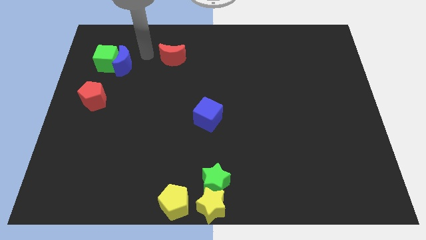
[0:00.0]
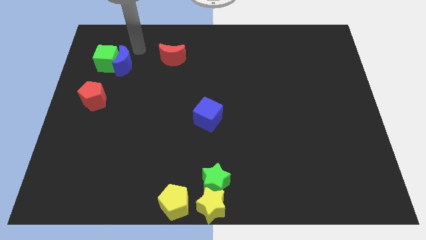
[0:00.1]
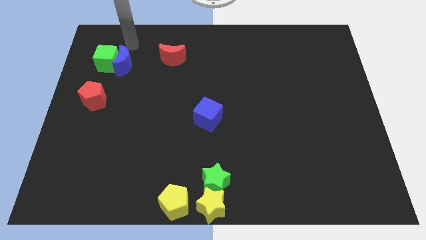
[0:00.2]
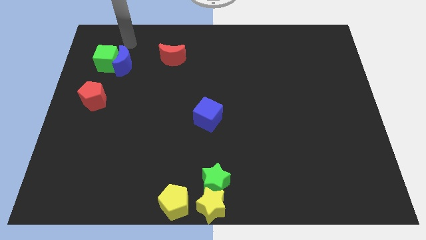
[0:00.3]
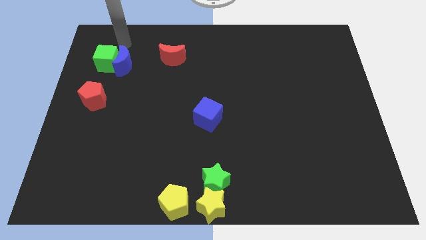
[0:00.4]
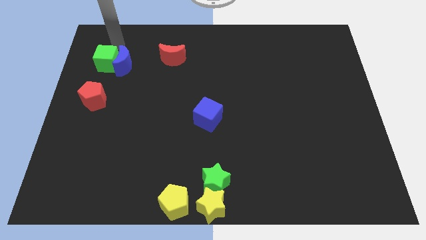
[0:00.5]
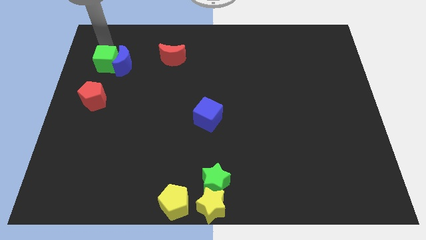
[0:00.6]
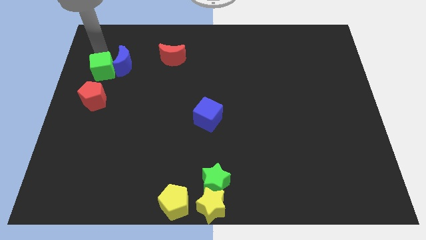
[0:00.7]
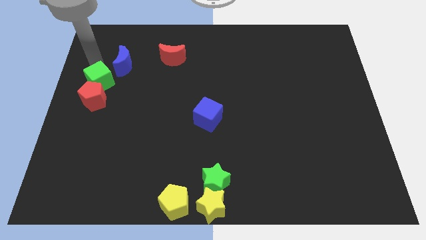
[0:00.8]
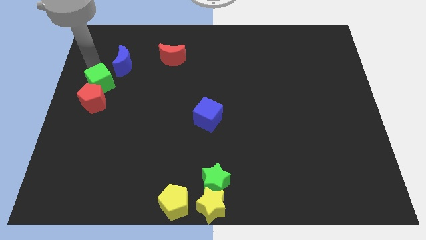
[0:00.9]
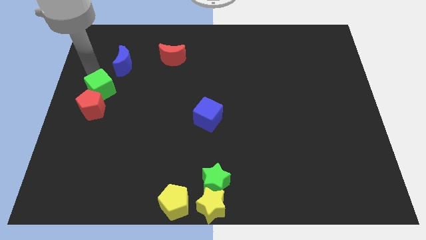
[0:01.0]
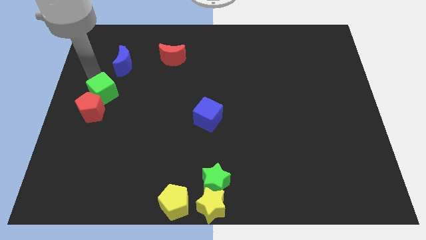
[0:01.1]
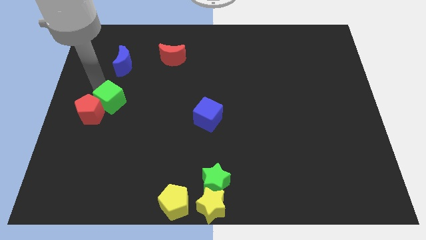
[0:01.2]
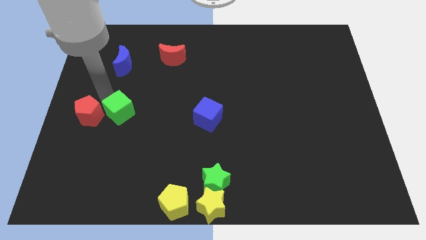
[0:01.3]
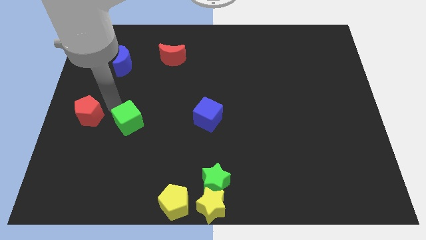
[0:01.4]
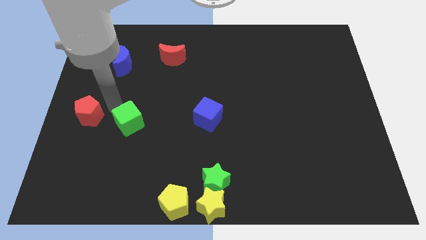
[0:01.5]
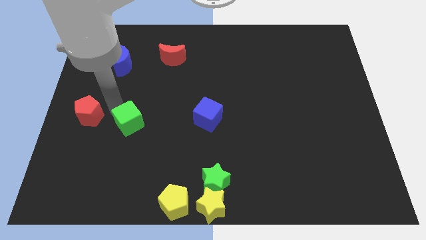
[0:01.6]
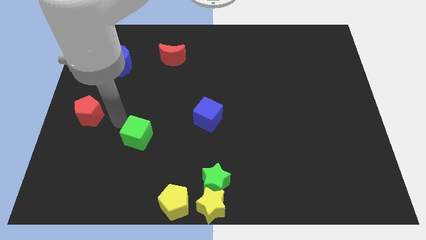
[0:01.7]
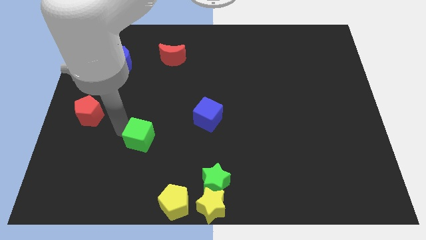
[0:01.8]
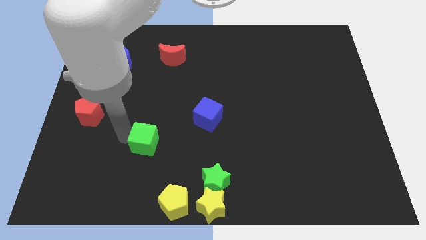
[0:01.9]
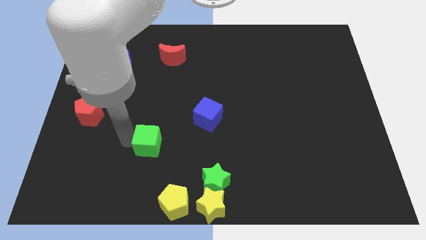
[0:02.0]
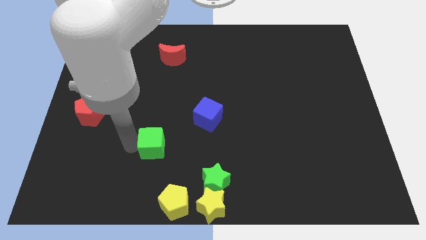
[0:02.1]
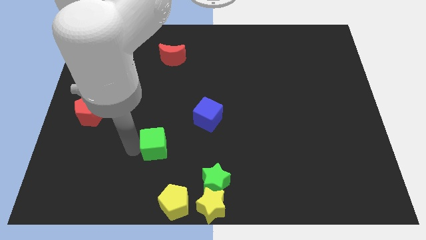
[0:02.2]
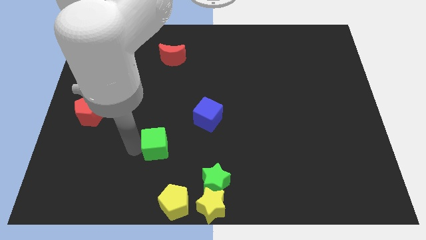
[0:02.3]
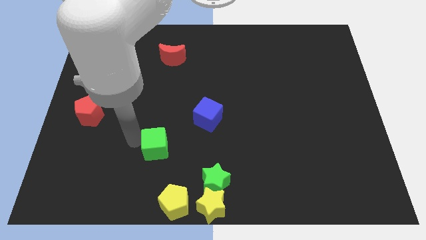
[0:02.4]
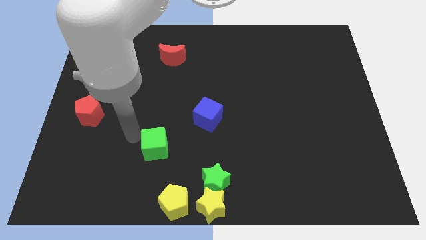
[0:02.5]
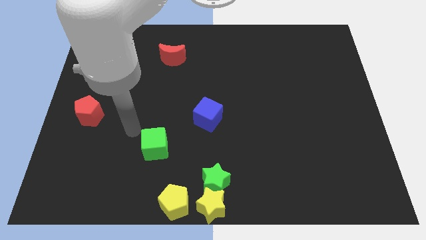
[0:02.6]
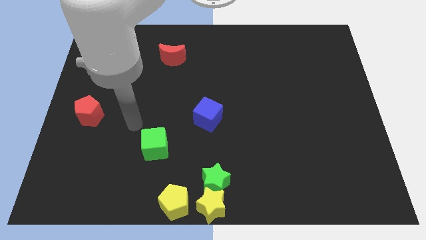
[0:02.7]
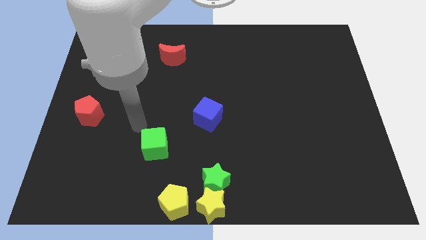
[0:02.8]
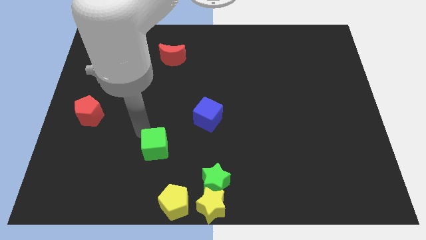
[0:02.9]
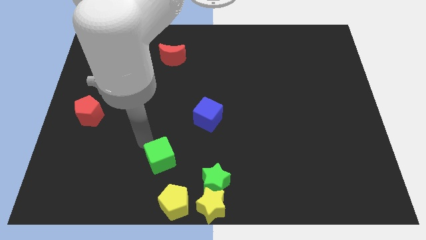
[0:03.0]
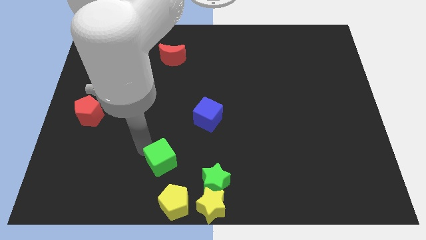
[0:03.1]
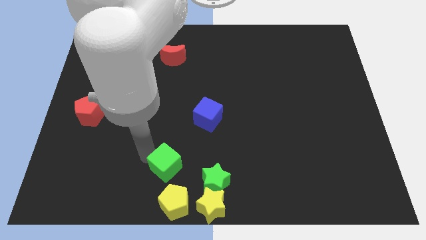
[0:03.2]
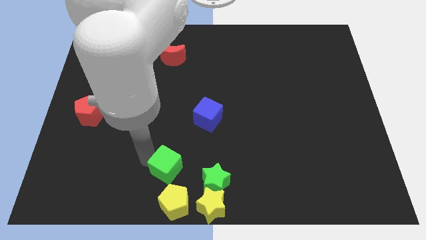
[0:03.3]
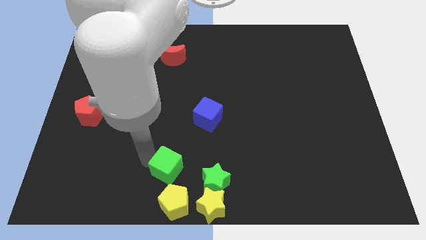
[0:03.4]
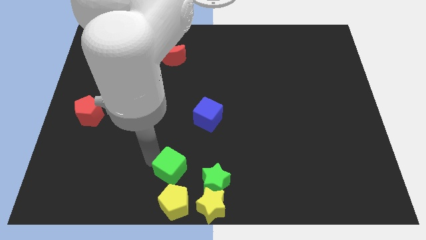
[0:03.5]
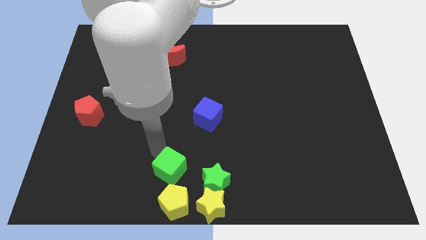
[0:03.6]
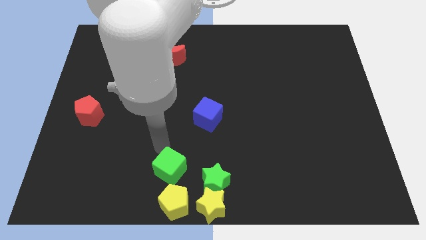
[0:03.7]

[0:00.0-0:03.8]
place green cube to the top of yellow pentagon

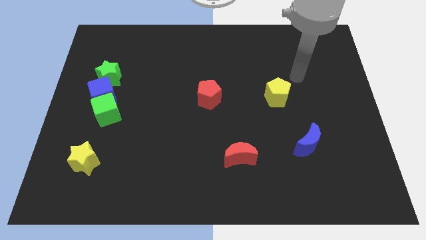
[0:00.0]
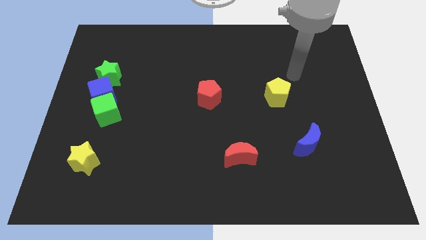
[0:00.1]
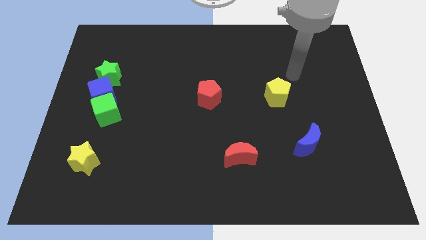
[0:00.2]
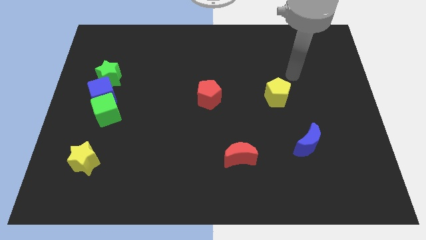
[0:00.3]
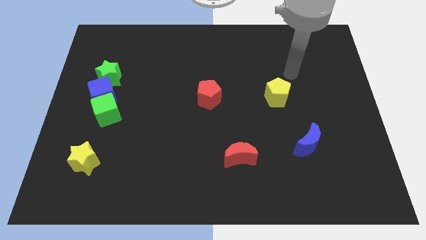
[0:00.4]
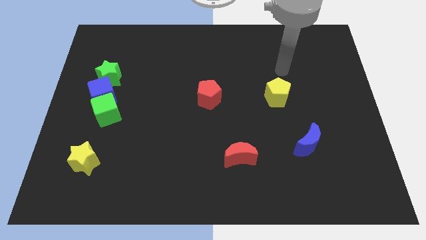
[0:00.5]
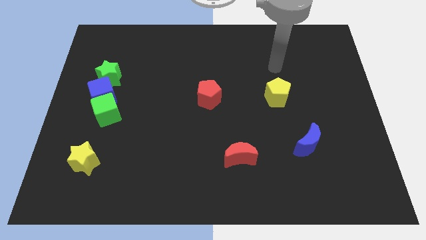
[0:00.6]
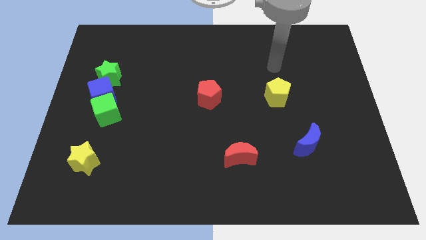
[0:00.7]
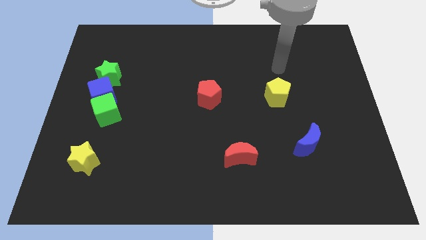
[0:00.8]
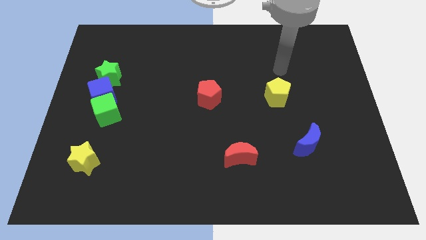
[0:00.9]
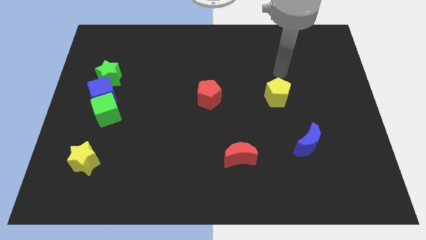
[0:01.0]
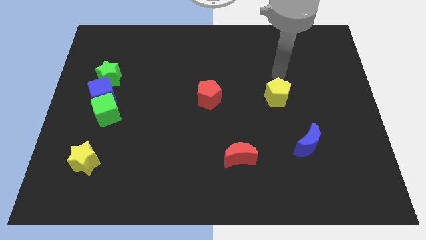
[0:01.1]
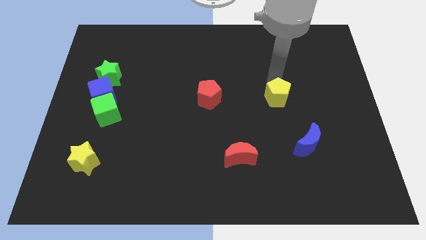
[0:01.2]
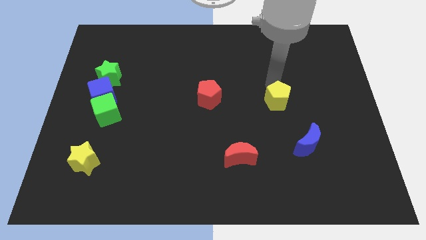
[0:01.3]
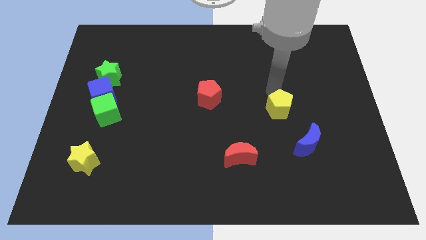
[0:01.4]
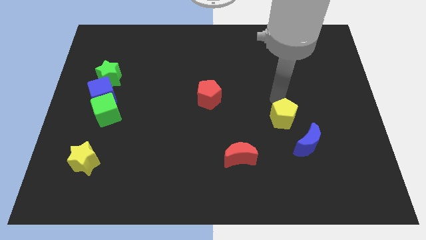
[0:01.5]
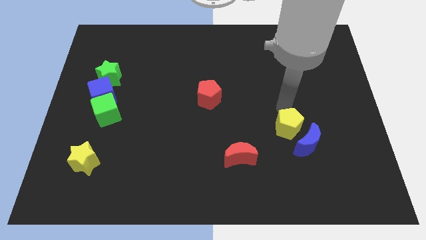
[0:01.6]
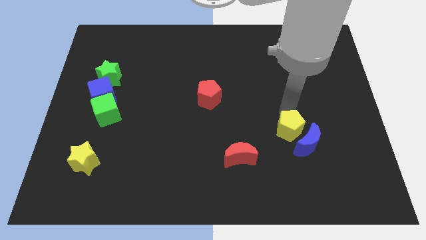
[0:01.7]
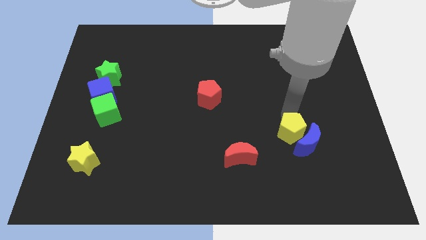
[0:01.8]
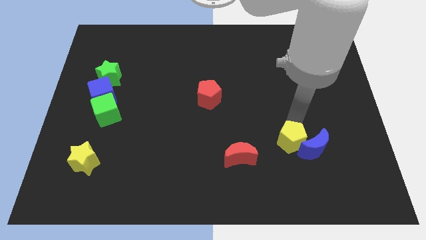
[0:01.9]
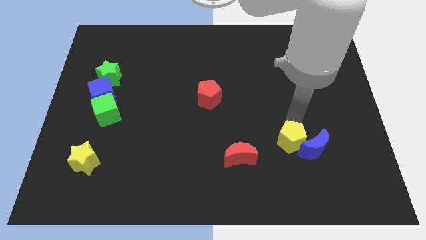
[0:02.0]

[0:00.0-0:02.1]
push the yellow pentagon into the blue crescent

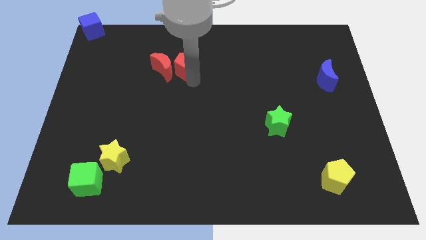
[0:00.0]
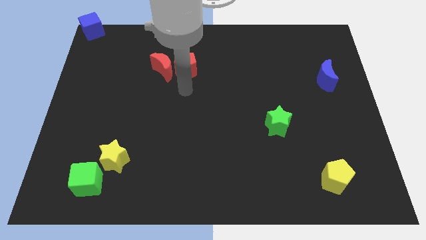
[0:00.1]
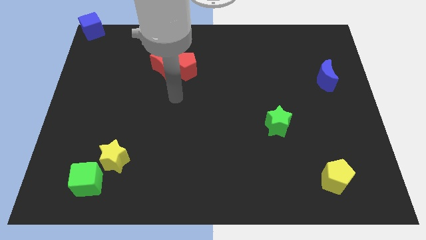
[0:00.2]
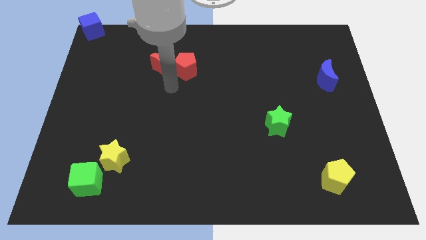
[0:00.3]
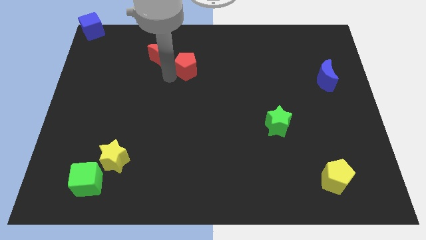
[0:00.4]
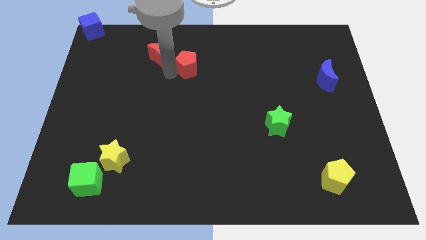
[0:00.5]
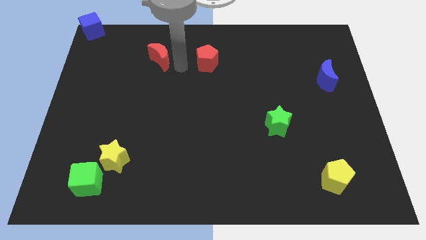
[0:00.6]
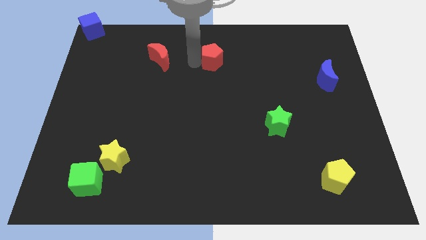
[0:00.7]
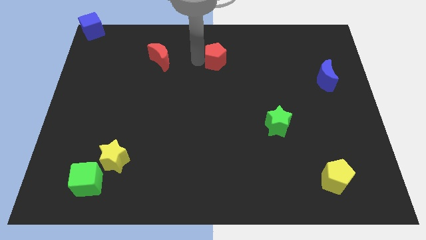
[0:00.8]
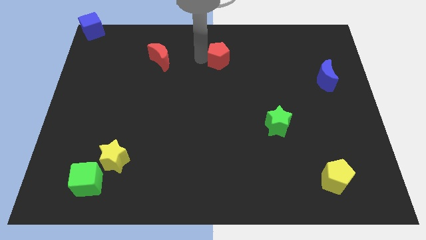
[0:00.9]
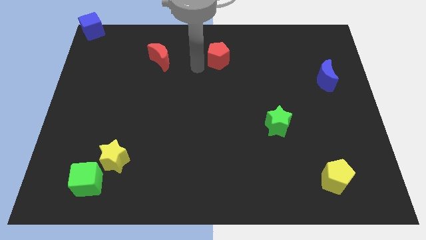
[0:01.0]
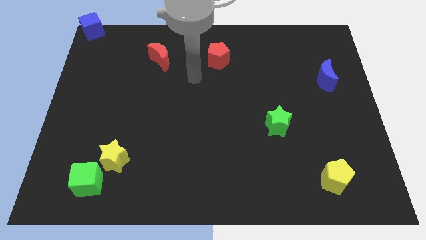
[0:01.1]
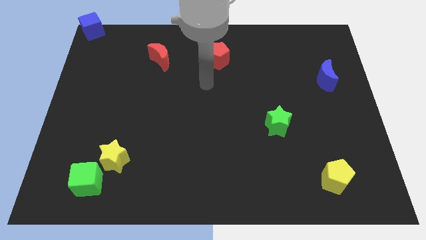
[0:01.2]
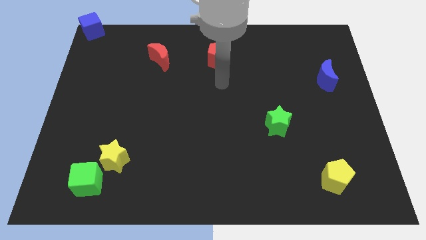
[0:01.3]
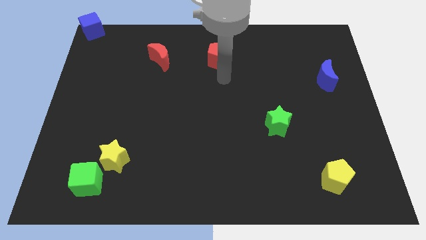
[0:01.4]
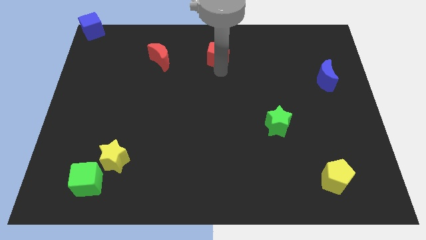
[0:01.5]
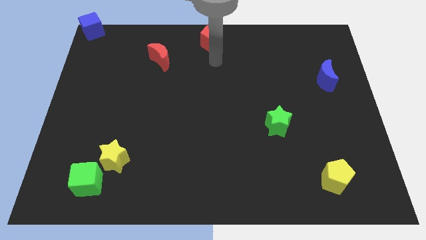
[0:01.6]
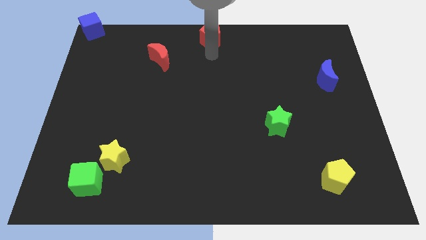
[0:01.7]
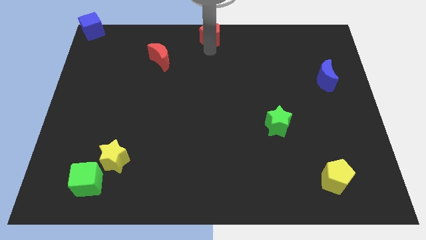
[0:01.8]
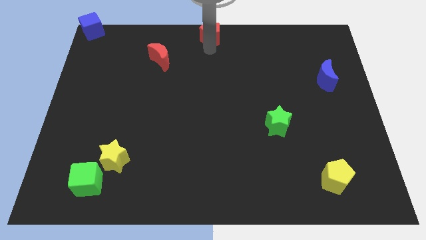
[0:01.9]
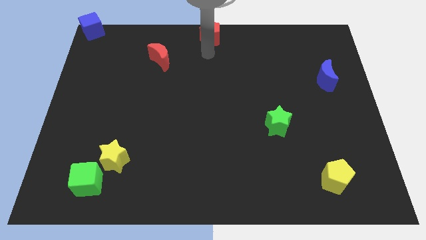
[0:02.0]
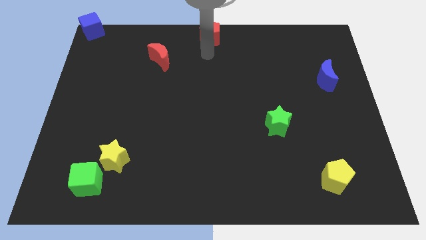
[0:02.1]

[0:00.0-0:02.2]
push the red pentagon to top center of the board

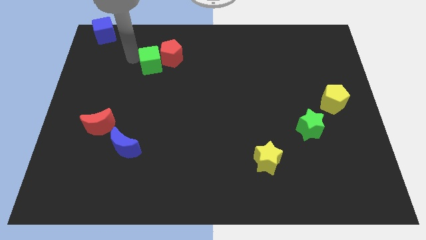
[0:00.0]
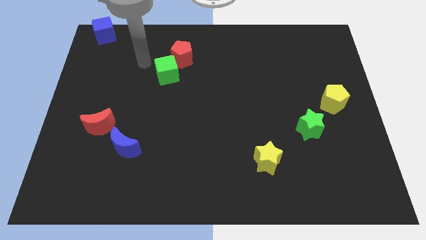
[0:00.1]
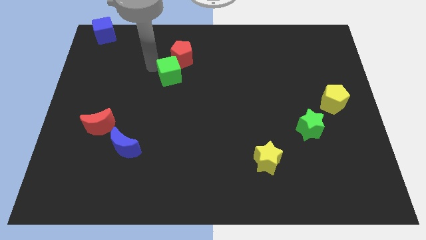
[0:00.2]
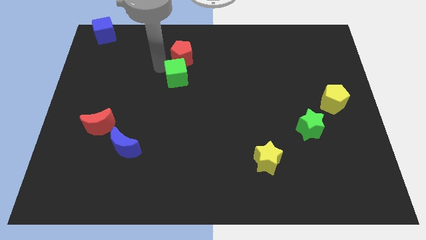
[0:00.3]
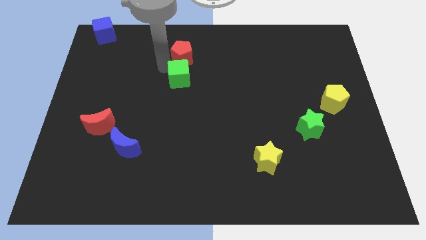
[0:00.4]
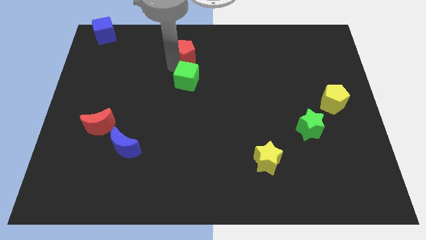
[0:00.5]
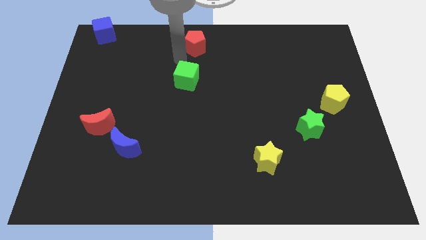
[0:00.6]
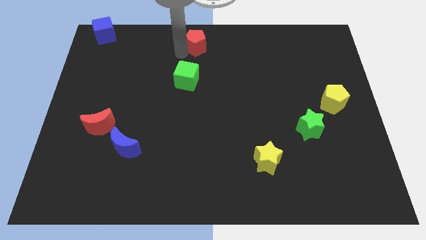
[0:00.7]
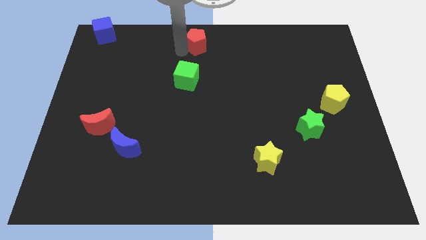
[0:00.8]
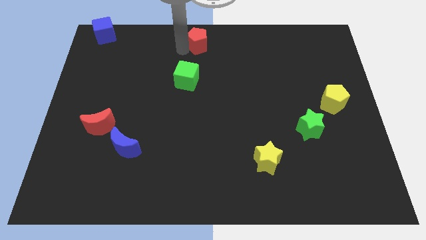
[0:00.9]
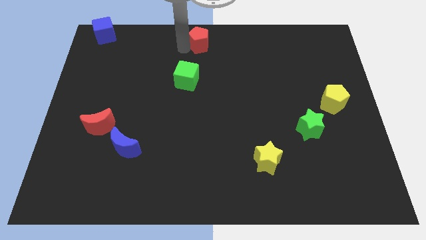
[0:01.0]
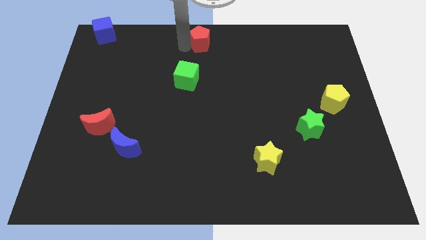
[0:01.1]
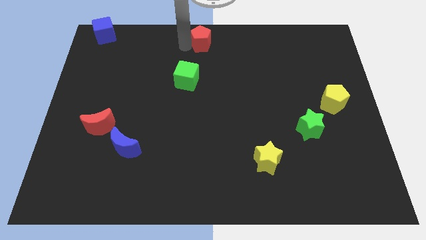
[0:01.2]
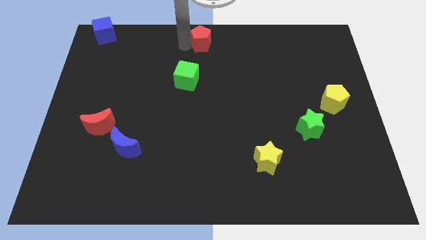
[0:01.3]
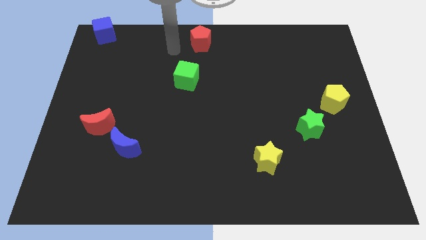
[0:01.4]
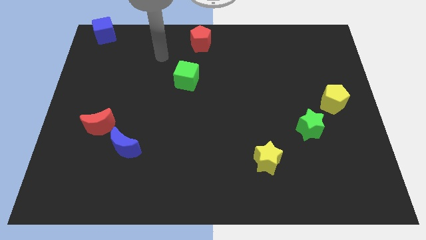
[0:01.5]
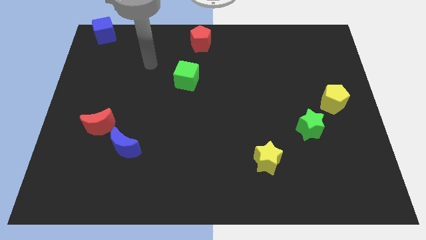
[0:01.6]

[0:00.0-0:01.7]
separate the red pentagon from green cube
